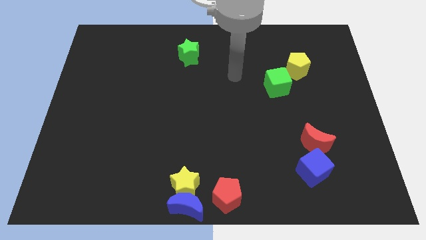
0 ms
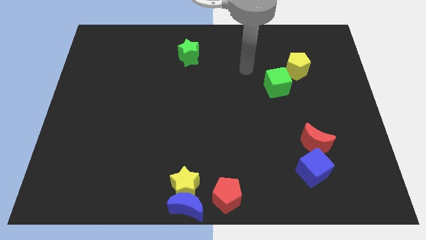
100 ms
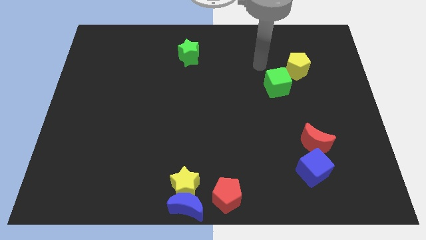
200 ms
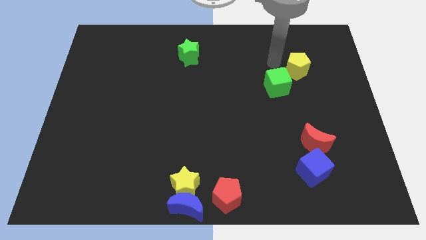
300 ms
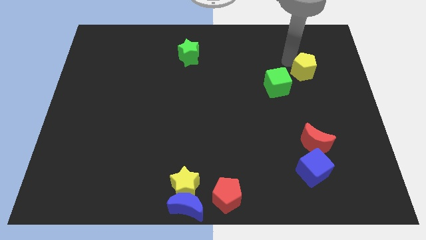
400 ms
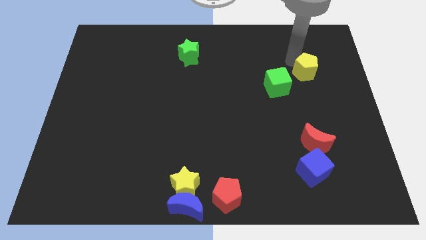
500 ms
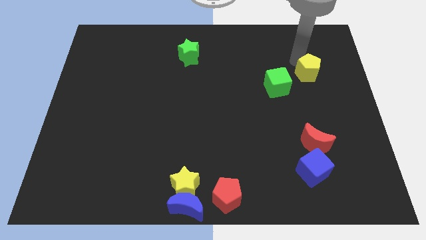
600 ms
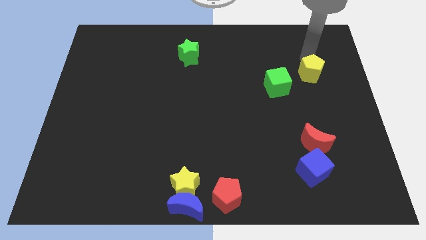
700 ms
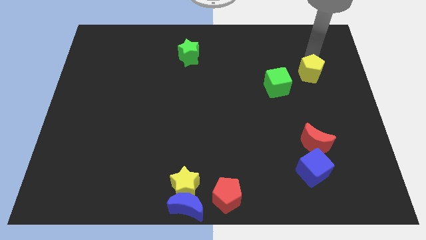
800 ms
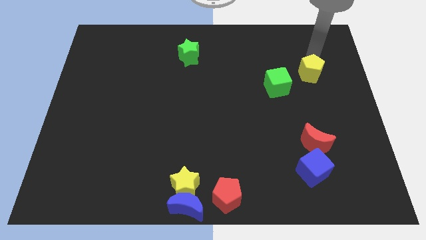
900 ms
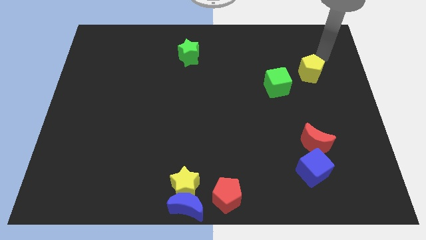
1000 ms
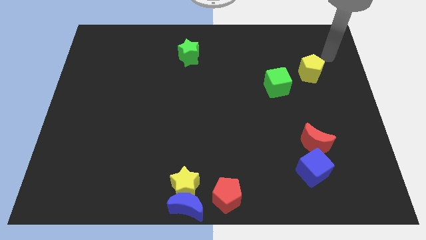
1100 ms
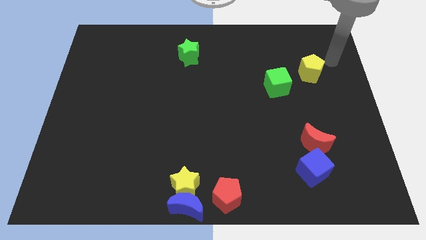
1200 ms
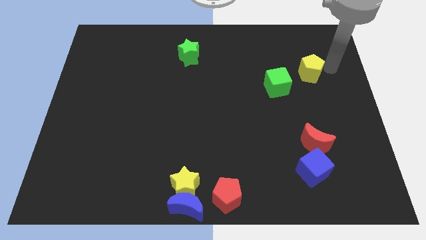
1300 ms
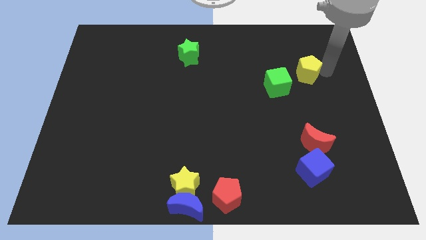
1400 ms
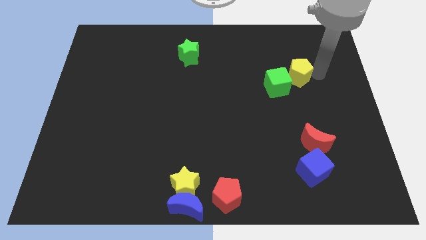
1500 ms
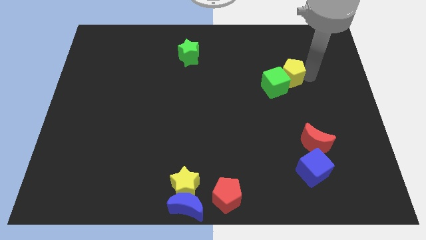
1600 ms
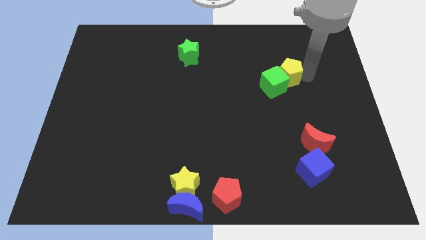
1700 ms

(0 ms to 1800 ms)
push the yellow pentagon into the green cube

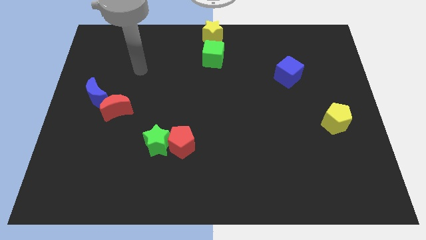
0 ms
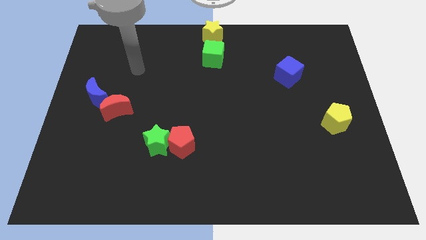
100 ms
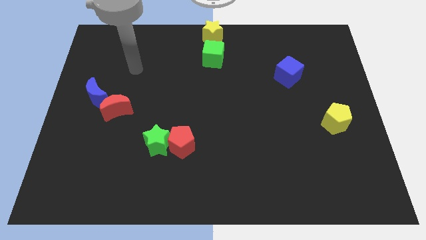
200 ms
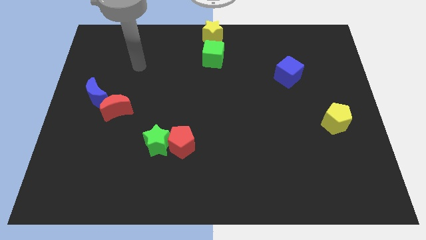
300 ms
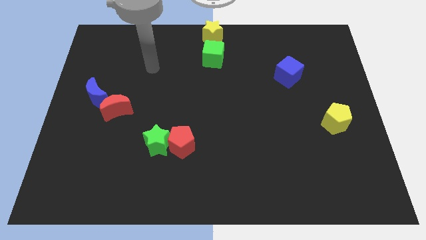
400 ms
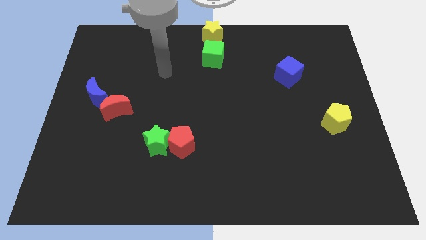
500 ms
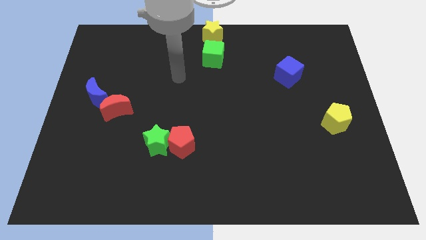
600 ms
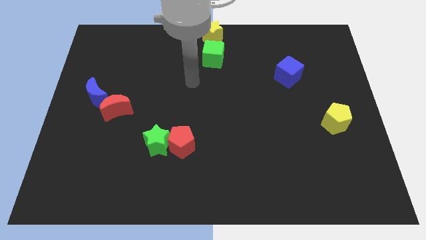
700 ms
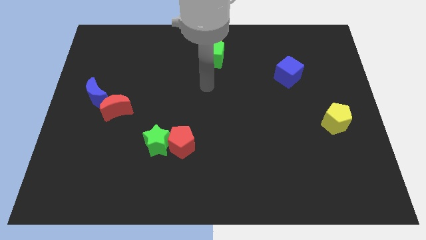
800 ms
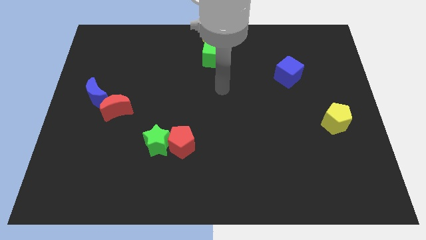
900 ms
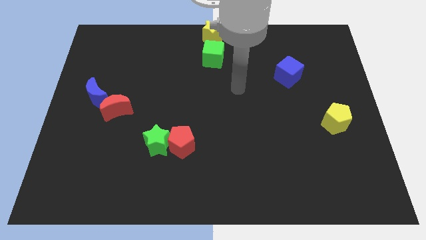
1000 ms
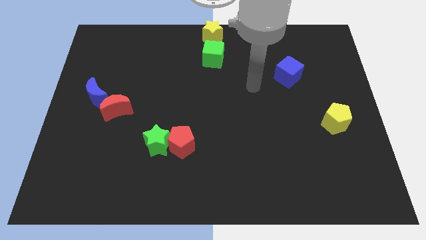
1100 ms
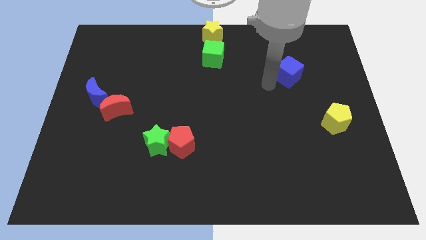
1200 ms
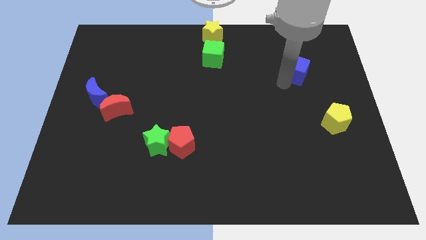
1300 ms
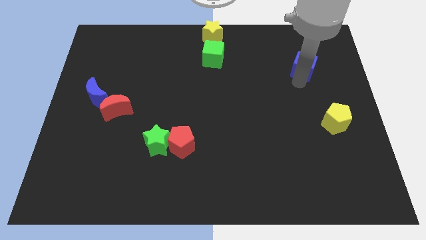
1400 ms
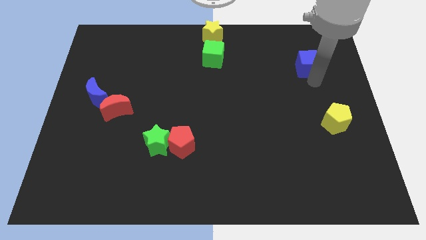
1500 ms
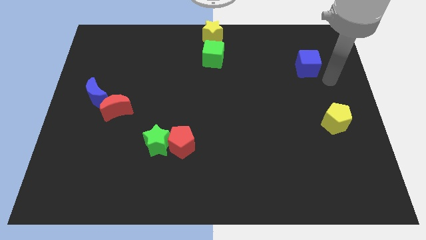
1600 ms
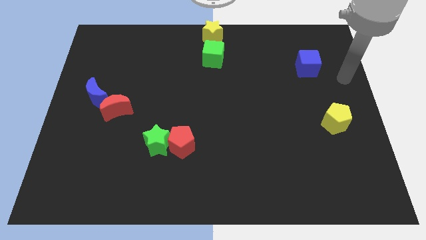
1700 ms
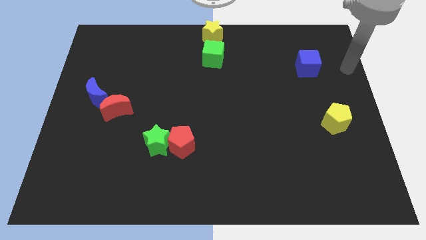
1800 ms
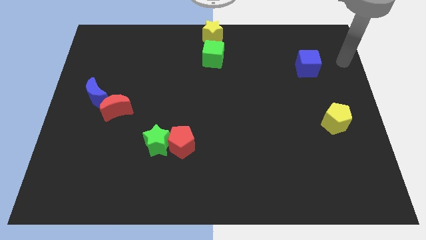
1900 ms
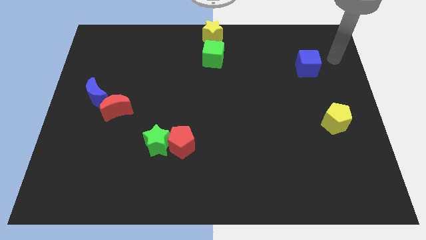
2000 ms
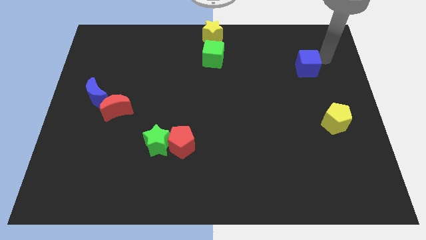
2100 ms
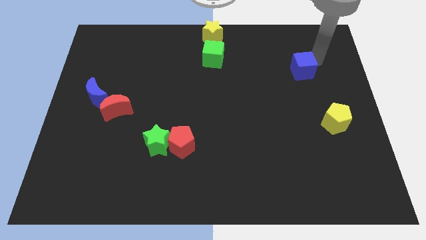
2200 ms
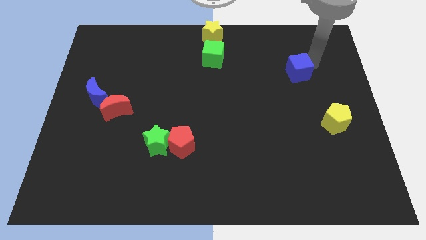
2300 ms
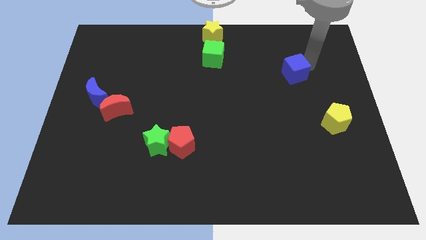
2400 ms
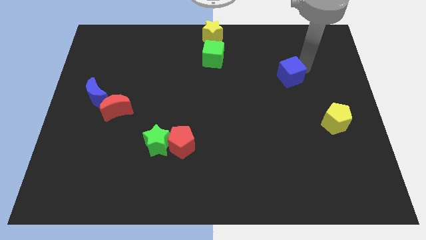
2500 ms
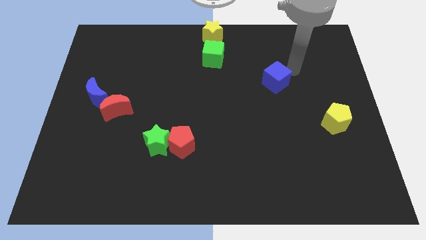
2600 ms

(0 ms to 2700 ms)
place your arm at the top of blue cube

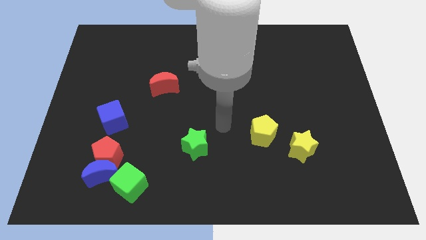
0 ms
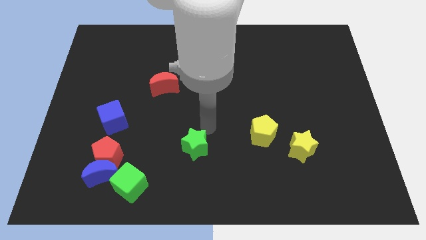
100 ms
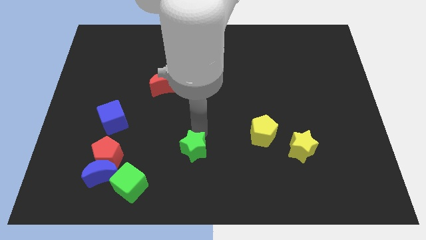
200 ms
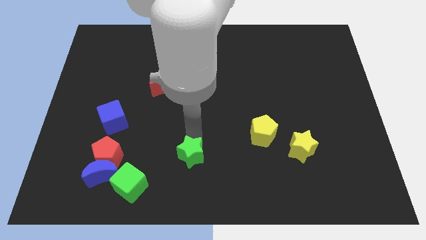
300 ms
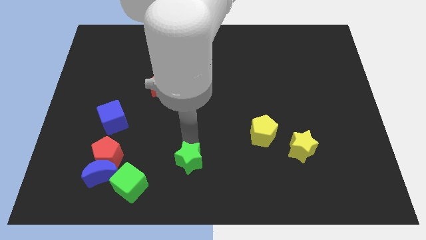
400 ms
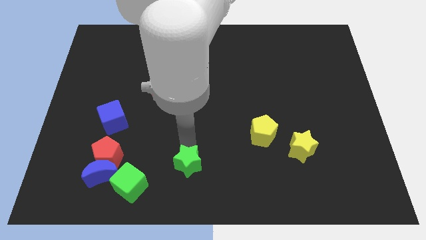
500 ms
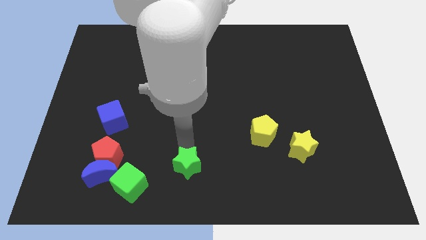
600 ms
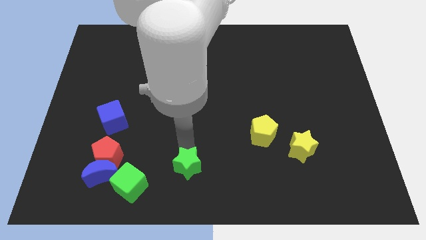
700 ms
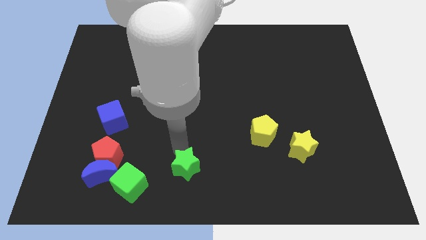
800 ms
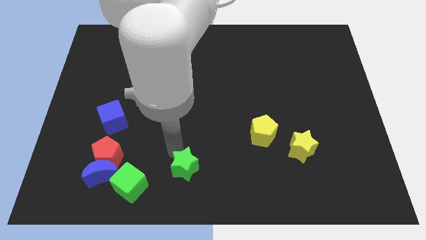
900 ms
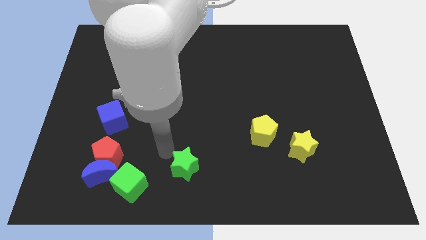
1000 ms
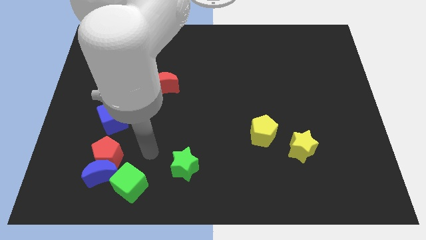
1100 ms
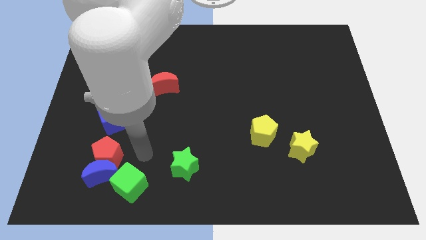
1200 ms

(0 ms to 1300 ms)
slide the green star to the bottom side of the board

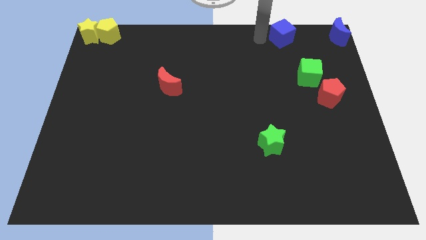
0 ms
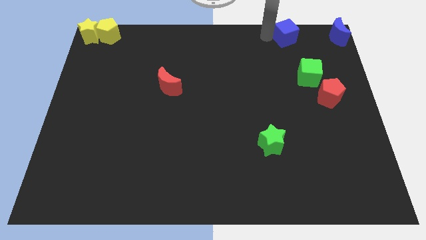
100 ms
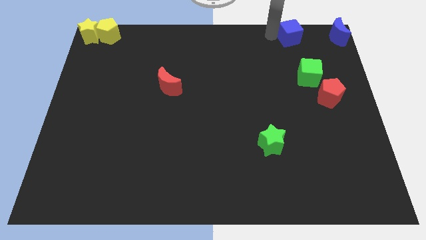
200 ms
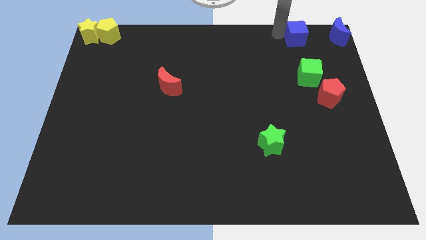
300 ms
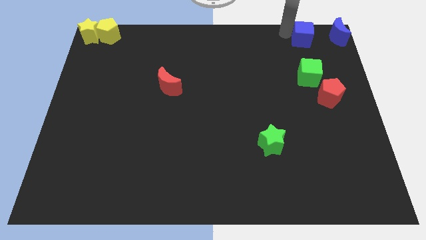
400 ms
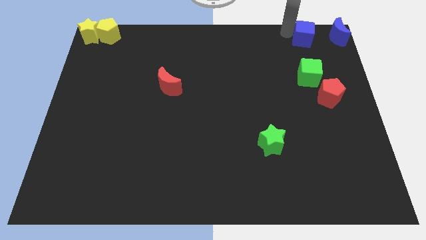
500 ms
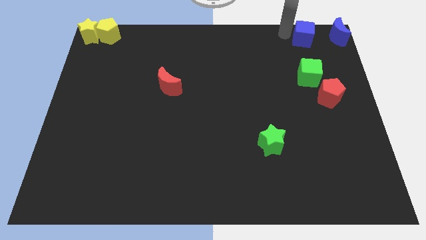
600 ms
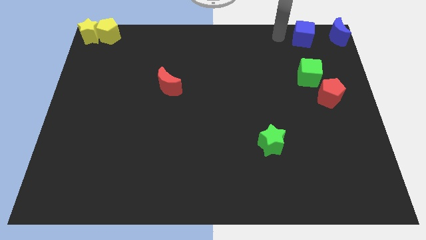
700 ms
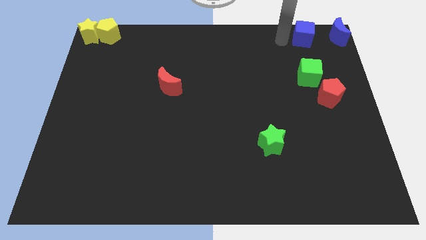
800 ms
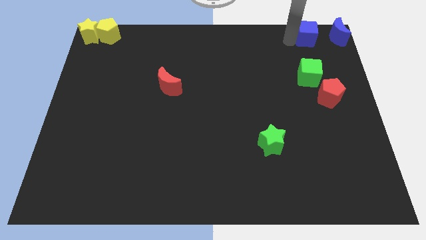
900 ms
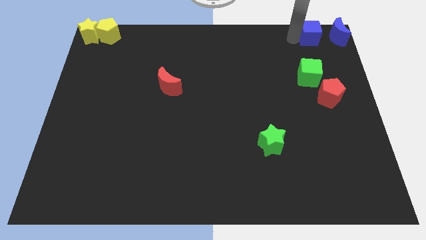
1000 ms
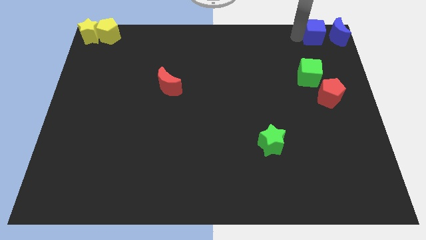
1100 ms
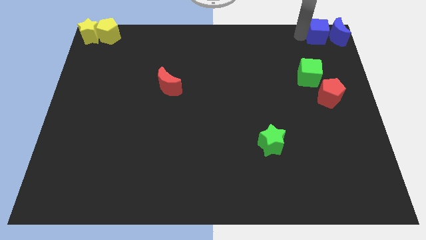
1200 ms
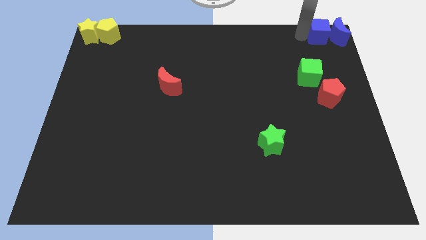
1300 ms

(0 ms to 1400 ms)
push the blue cube left to the blue crescent

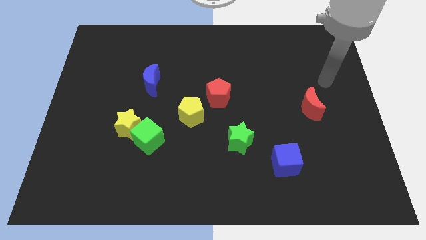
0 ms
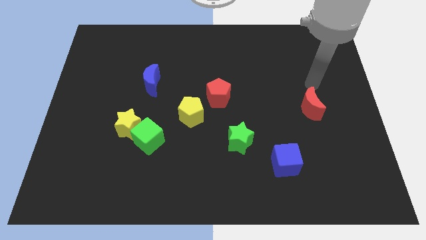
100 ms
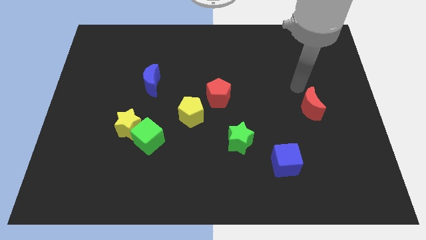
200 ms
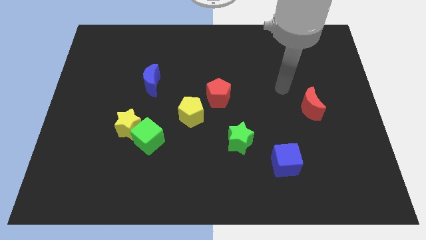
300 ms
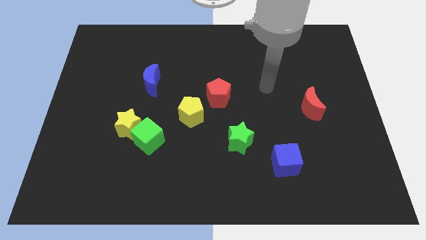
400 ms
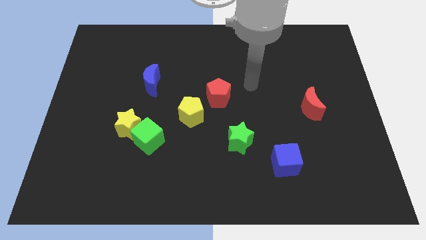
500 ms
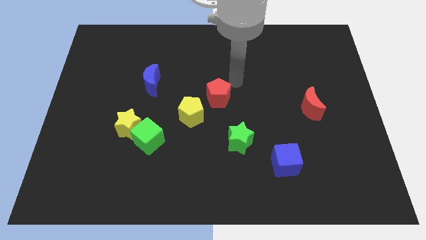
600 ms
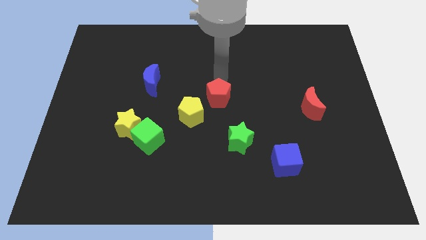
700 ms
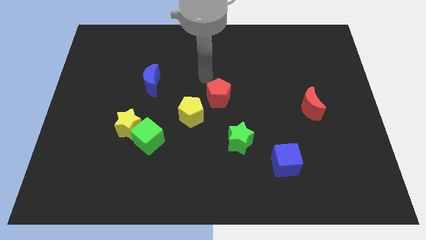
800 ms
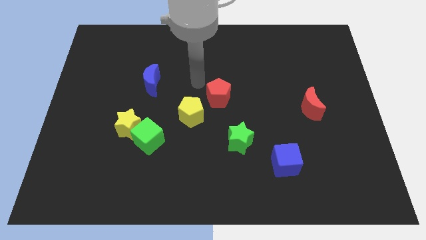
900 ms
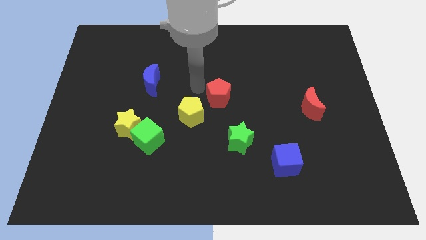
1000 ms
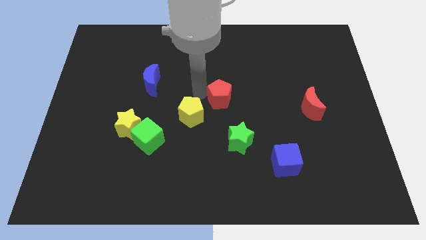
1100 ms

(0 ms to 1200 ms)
move your arm to the left of red pentagon

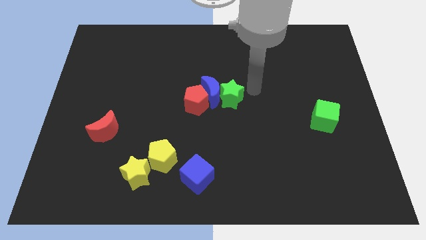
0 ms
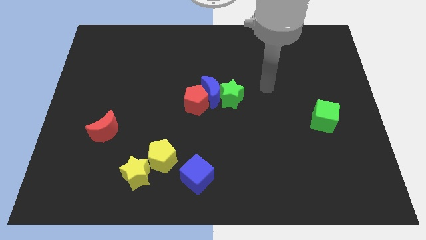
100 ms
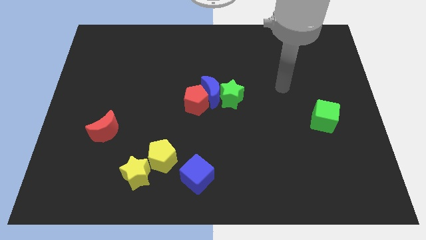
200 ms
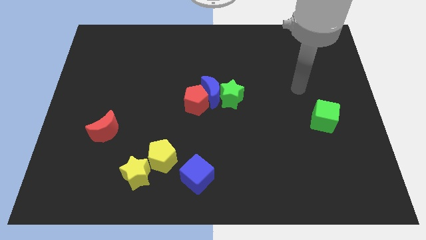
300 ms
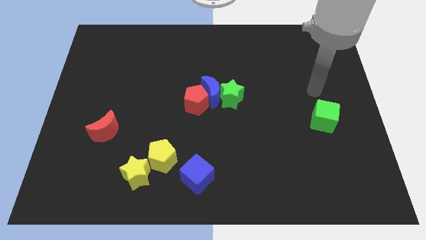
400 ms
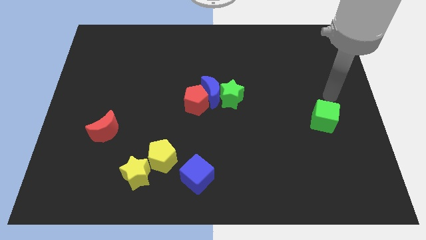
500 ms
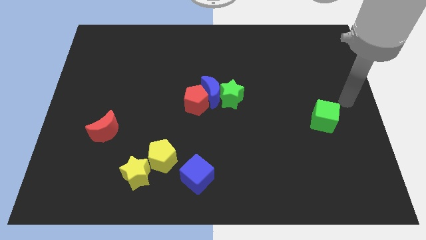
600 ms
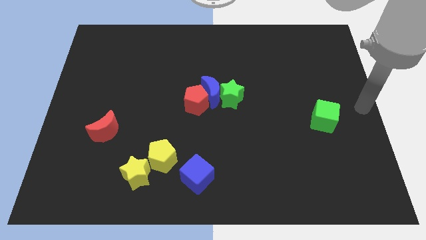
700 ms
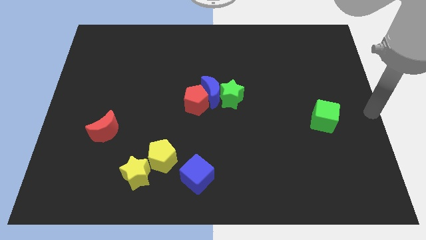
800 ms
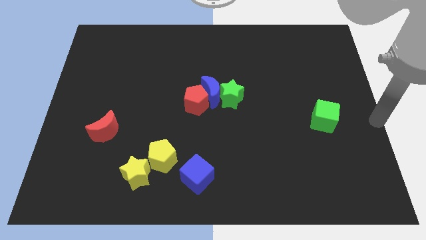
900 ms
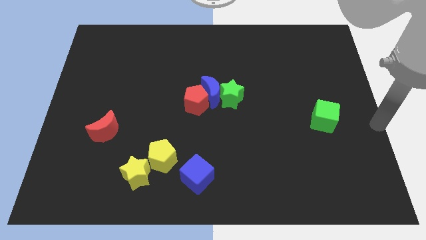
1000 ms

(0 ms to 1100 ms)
point your arm at the center right of the board
